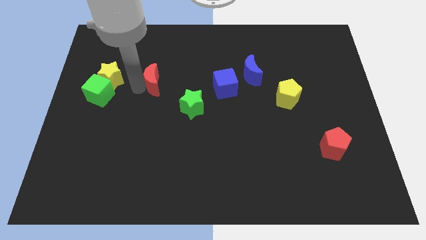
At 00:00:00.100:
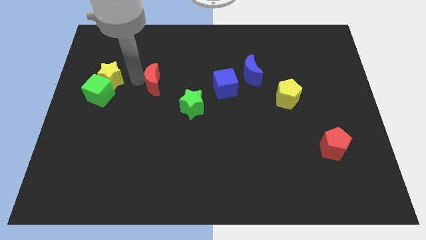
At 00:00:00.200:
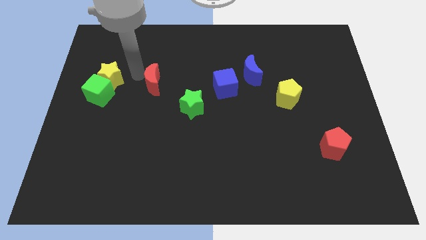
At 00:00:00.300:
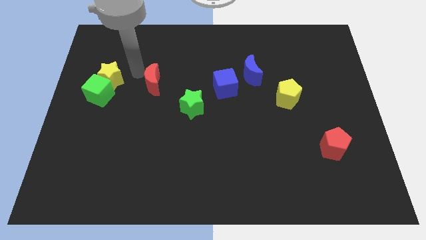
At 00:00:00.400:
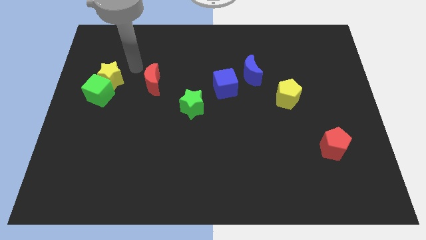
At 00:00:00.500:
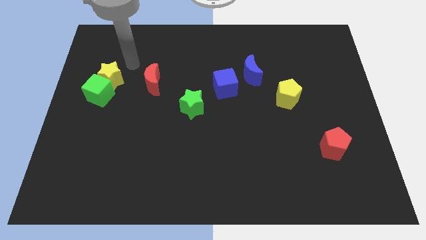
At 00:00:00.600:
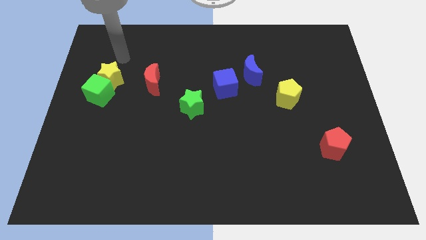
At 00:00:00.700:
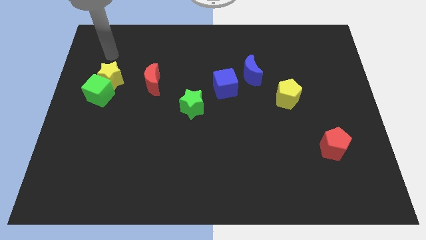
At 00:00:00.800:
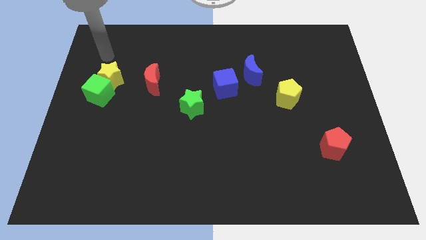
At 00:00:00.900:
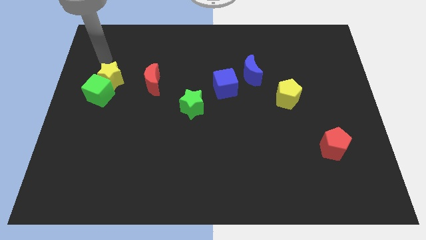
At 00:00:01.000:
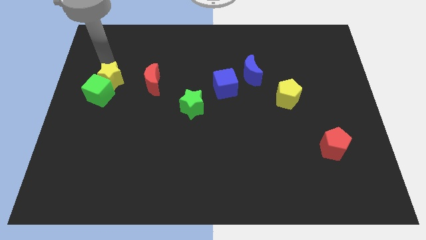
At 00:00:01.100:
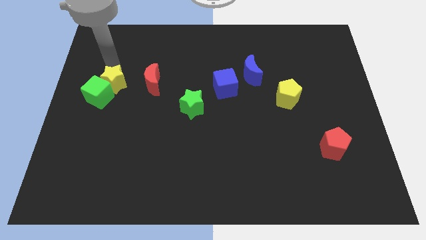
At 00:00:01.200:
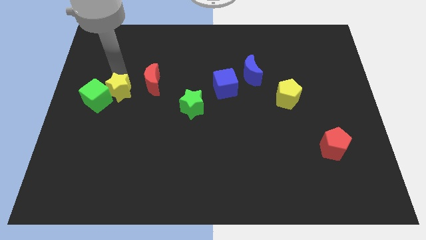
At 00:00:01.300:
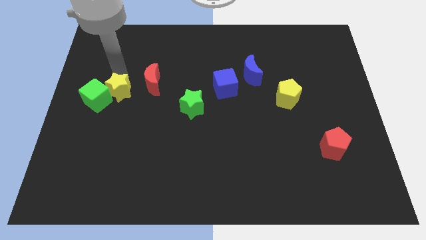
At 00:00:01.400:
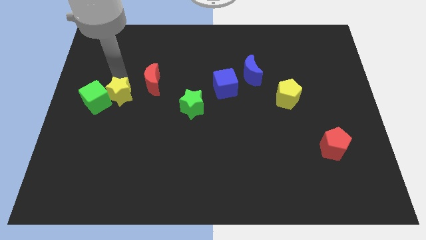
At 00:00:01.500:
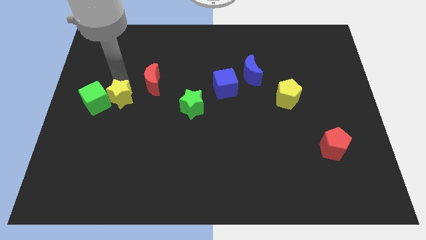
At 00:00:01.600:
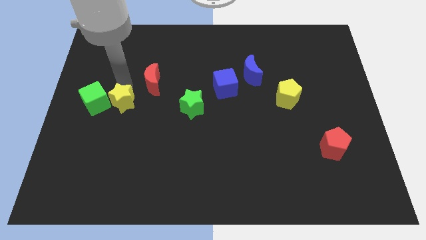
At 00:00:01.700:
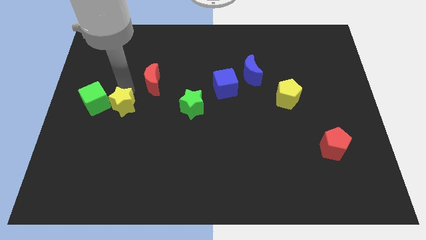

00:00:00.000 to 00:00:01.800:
slightly push the yellow star to the bottom of board

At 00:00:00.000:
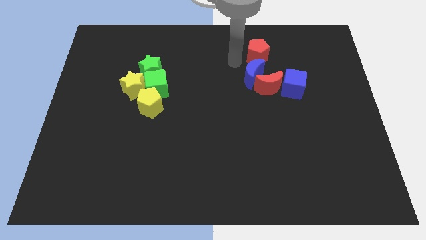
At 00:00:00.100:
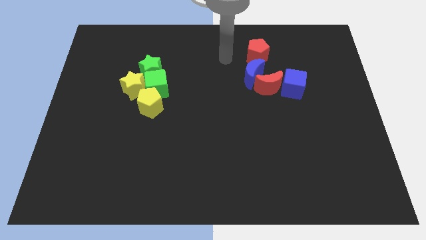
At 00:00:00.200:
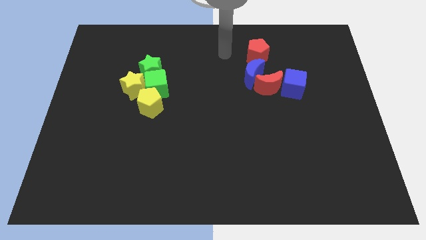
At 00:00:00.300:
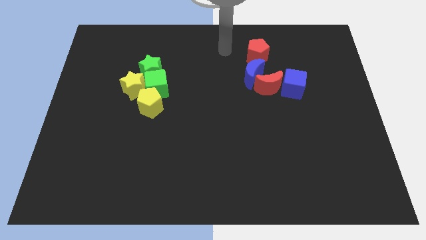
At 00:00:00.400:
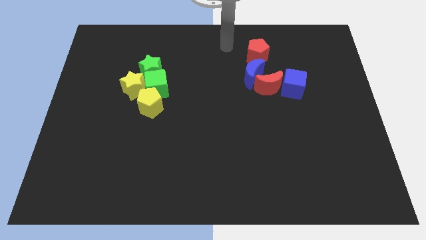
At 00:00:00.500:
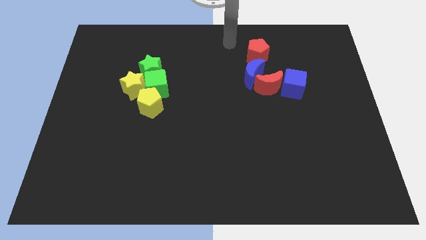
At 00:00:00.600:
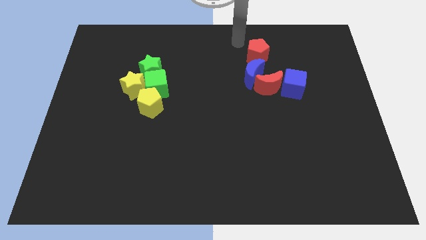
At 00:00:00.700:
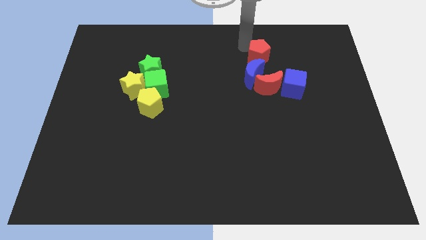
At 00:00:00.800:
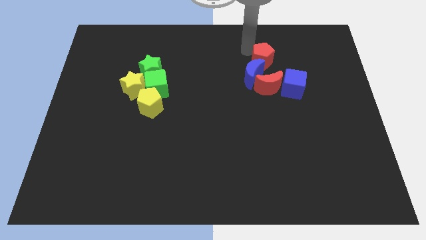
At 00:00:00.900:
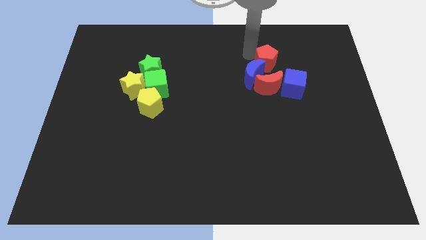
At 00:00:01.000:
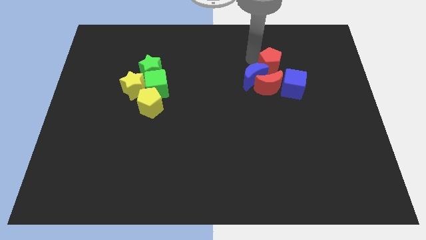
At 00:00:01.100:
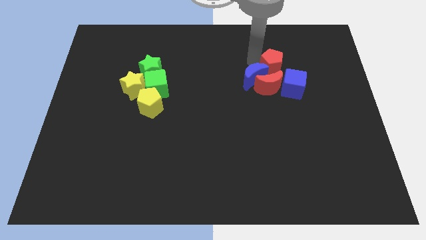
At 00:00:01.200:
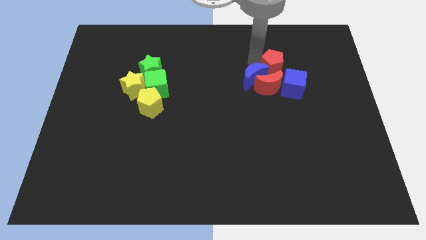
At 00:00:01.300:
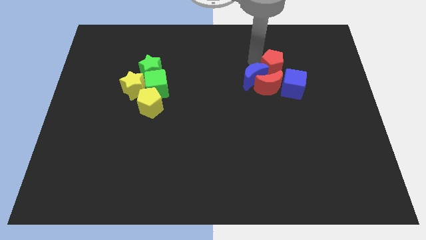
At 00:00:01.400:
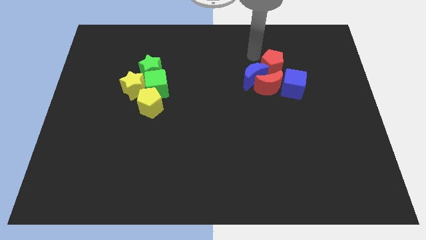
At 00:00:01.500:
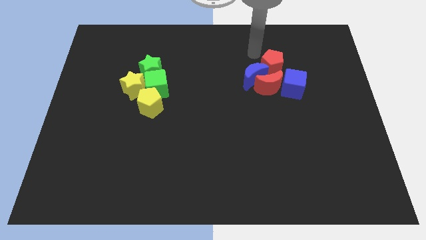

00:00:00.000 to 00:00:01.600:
place red pentagon to the top of red moon

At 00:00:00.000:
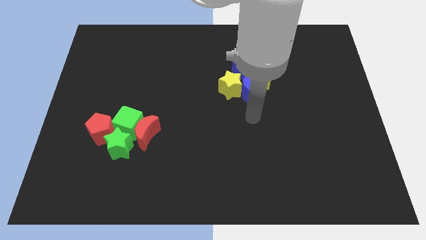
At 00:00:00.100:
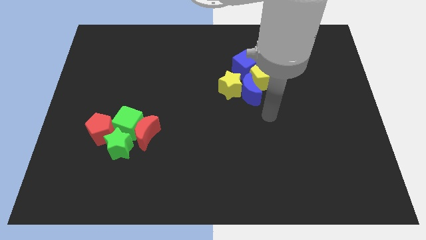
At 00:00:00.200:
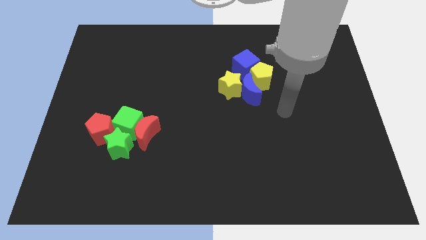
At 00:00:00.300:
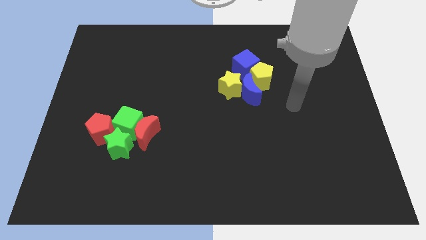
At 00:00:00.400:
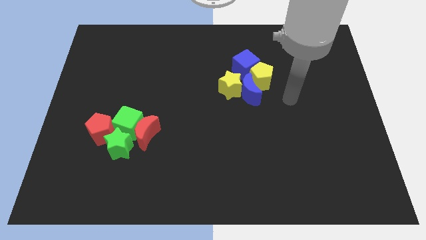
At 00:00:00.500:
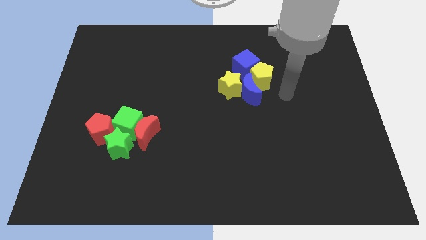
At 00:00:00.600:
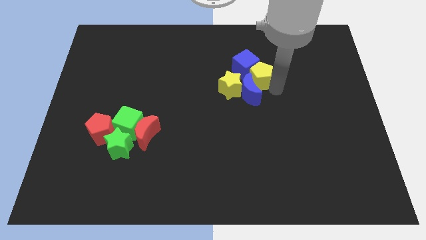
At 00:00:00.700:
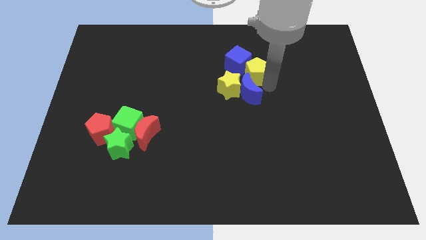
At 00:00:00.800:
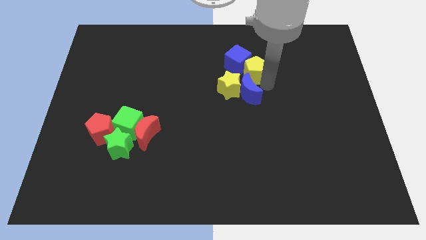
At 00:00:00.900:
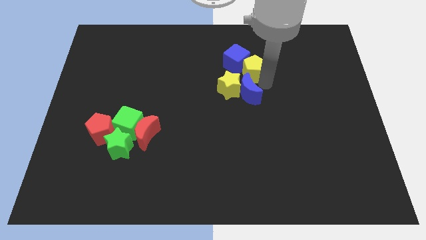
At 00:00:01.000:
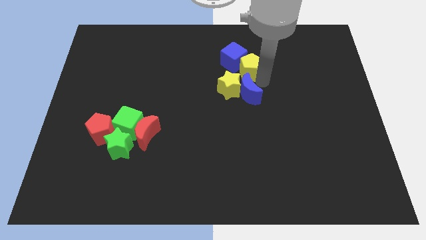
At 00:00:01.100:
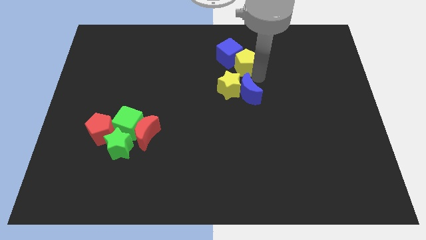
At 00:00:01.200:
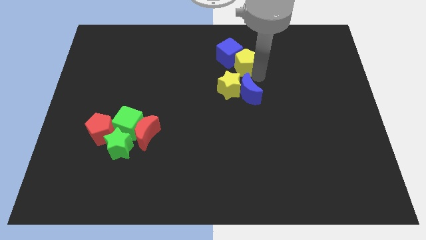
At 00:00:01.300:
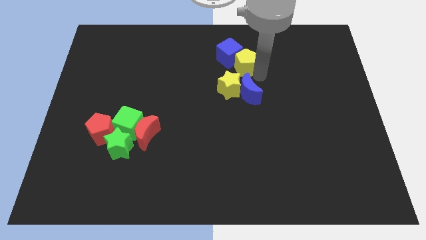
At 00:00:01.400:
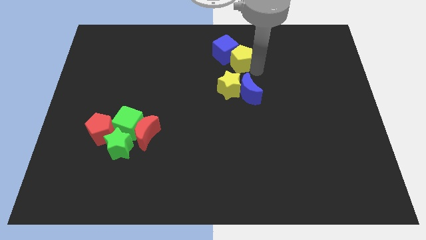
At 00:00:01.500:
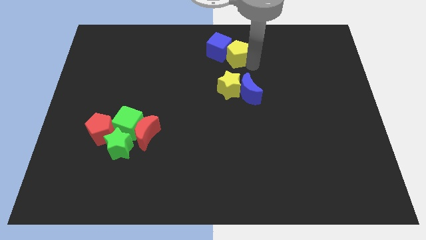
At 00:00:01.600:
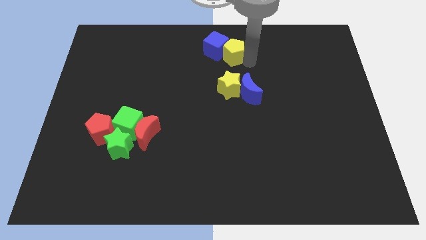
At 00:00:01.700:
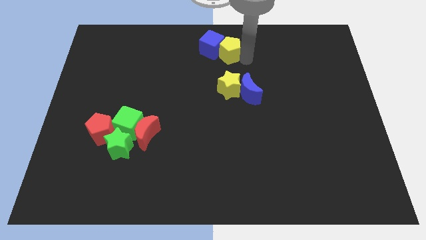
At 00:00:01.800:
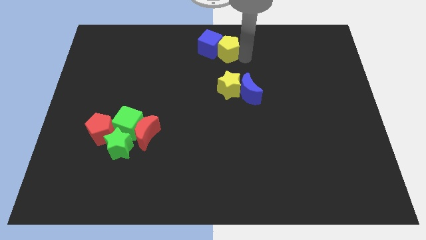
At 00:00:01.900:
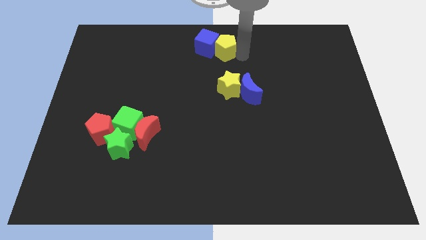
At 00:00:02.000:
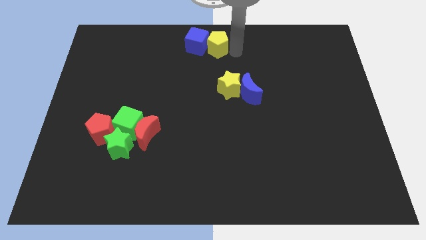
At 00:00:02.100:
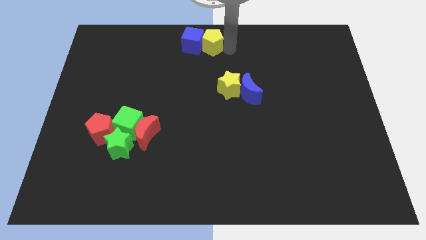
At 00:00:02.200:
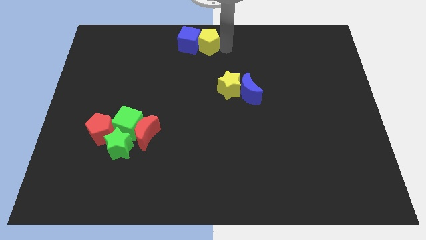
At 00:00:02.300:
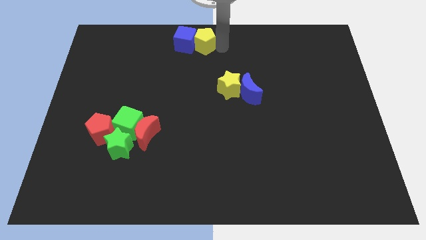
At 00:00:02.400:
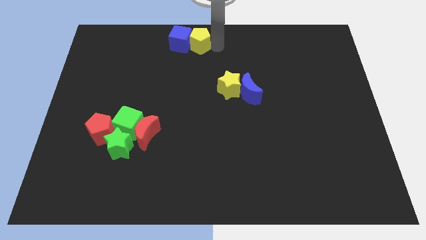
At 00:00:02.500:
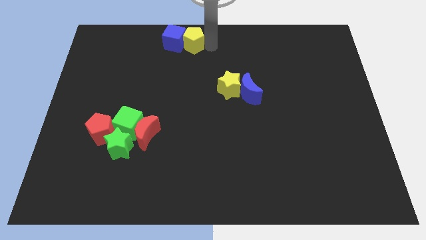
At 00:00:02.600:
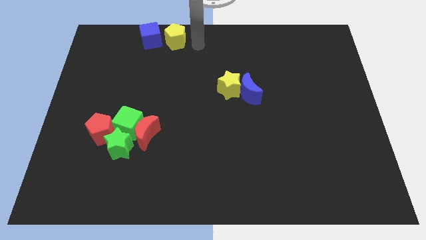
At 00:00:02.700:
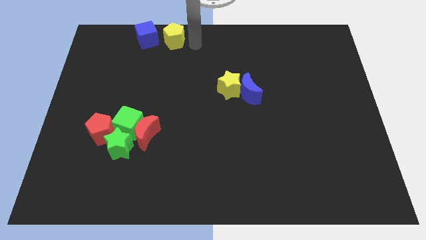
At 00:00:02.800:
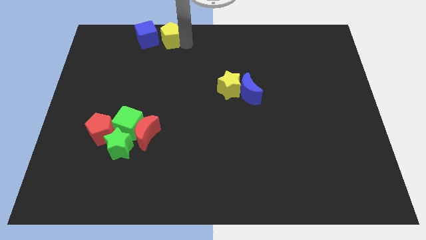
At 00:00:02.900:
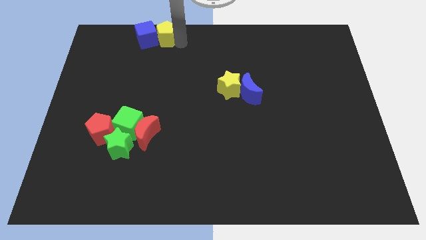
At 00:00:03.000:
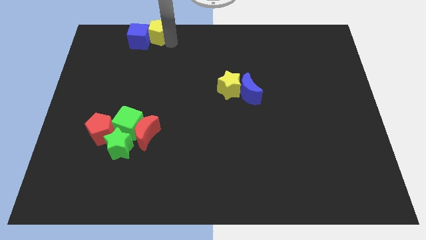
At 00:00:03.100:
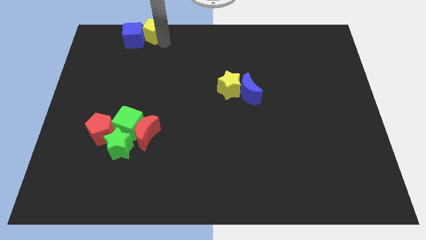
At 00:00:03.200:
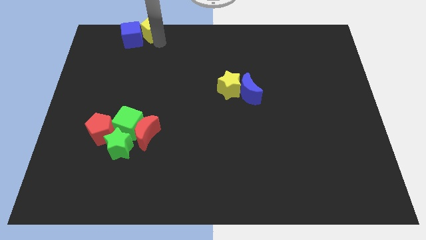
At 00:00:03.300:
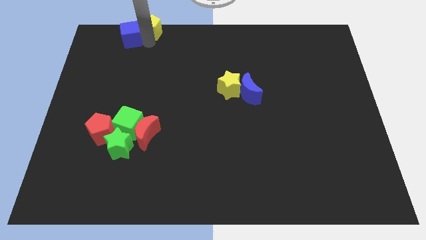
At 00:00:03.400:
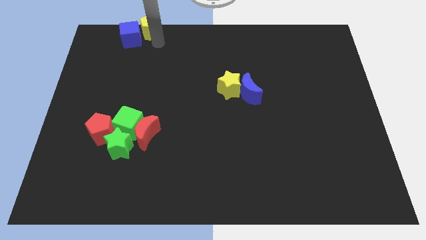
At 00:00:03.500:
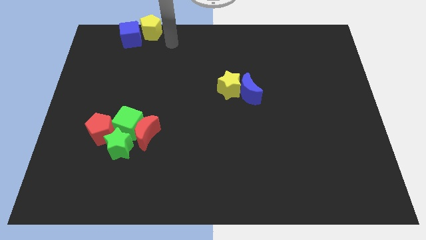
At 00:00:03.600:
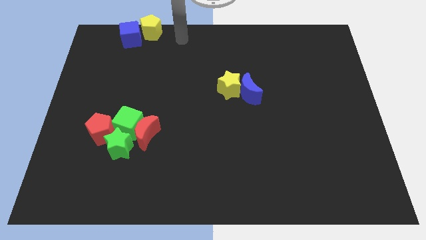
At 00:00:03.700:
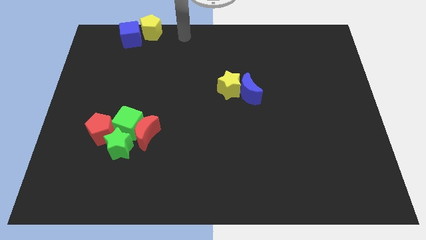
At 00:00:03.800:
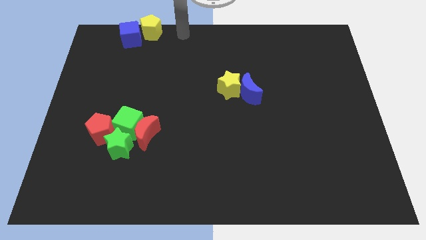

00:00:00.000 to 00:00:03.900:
push the yellow pentagon and blue cube to the top left side of the board

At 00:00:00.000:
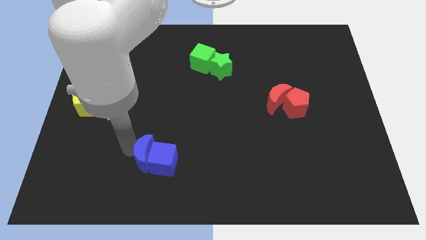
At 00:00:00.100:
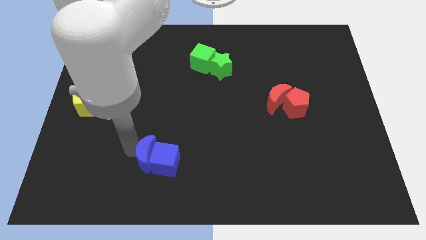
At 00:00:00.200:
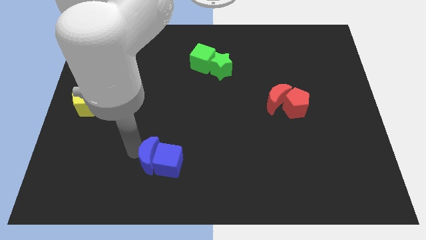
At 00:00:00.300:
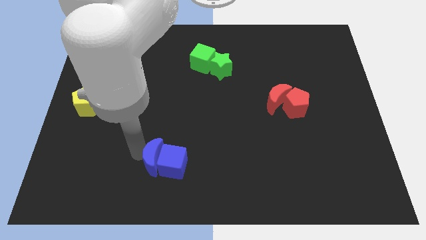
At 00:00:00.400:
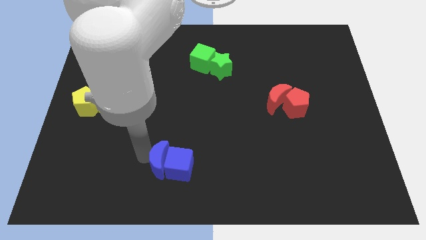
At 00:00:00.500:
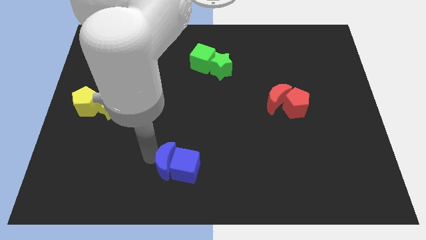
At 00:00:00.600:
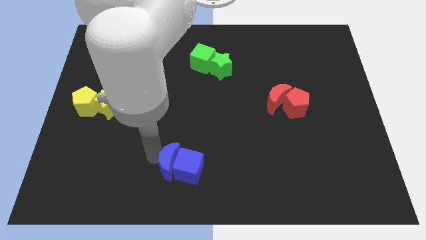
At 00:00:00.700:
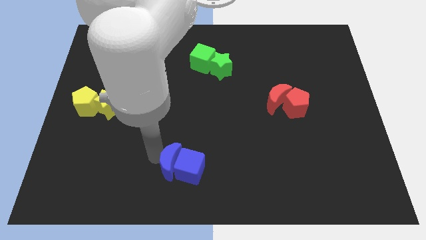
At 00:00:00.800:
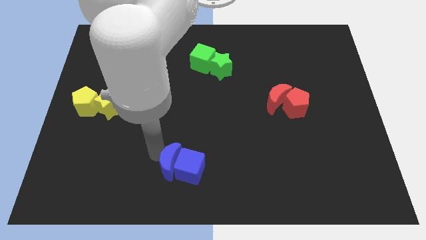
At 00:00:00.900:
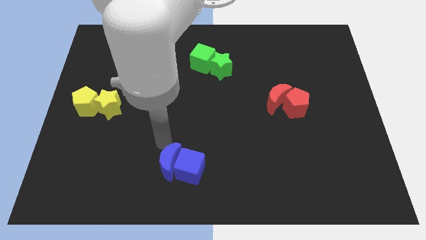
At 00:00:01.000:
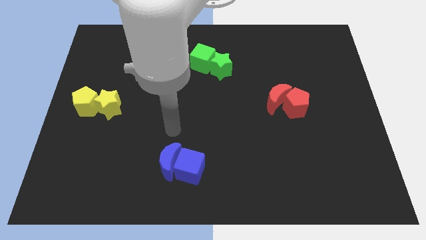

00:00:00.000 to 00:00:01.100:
move blue blocks at right side

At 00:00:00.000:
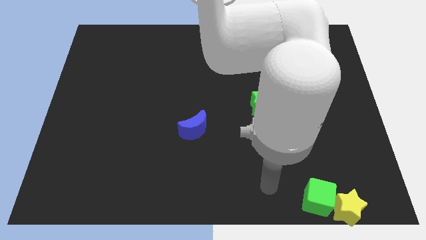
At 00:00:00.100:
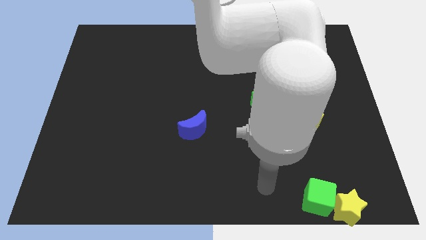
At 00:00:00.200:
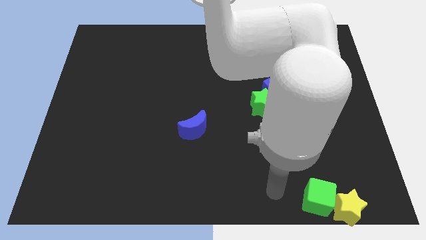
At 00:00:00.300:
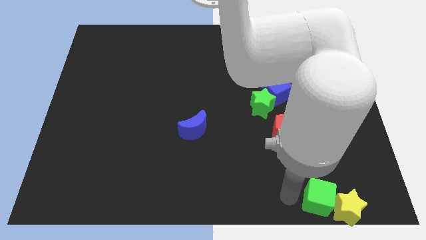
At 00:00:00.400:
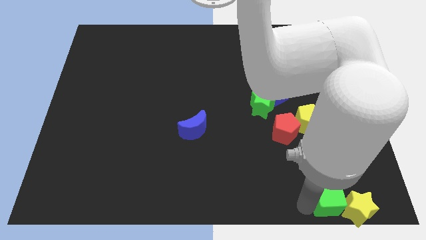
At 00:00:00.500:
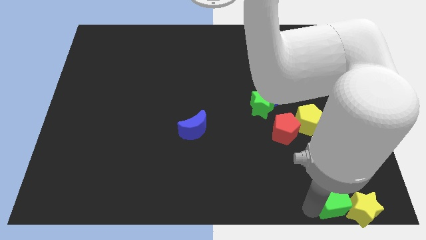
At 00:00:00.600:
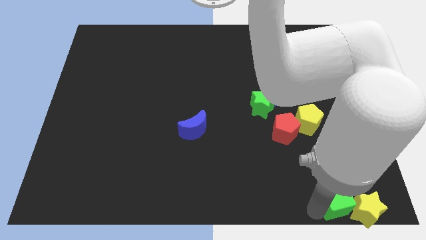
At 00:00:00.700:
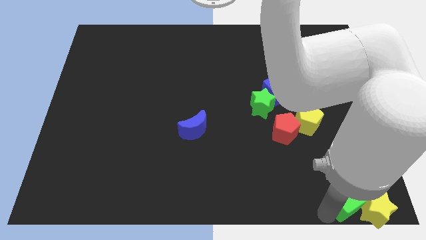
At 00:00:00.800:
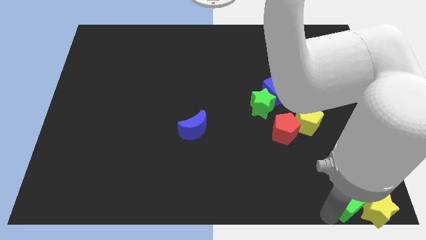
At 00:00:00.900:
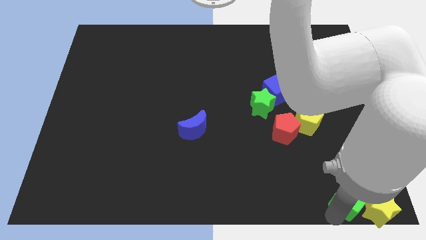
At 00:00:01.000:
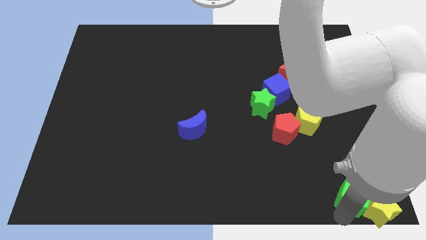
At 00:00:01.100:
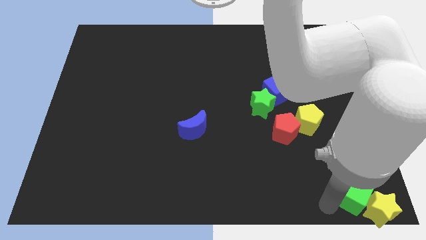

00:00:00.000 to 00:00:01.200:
push the green cube and yellow star to the bottom right side
